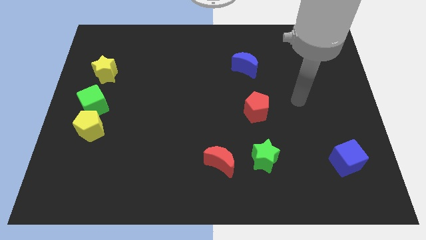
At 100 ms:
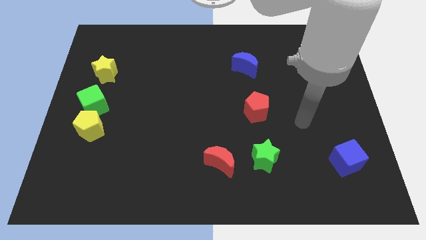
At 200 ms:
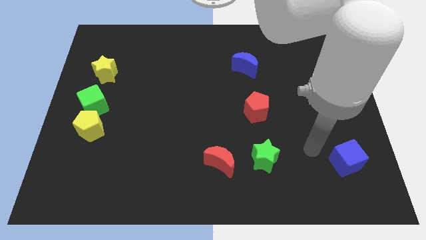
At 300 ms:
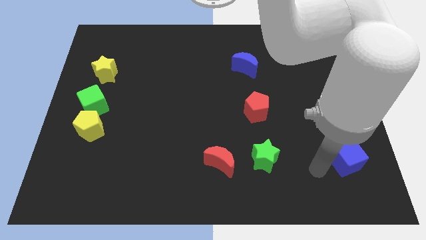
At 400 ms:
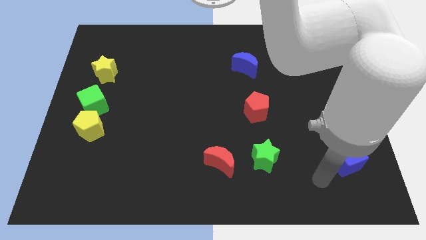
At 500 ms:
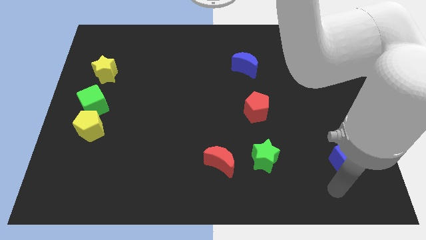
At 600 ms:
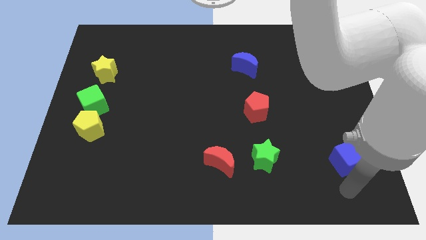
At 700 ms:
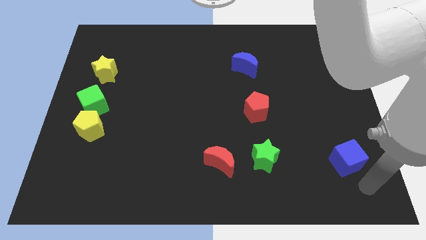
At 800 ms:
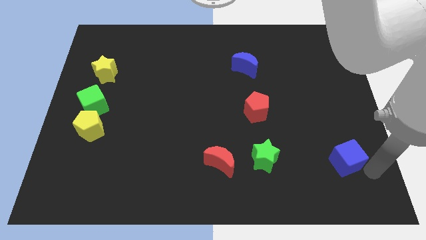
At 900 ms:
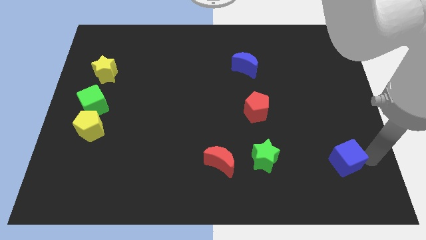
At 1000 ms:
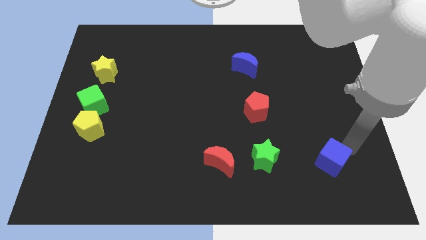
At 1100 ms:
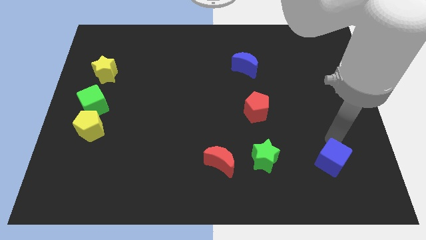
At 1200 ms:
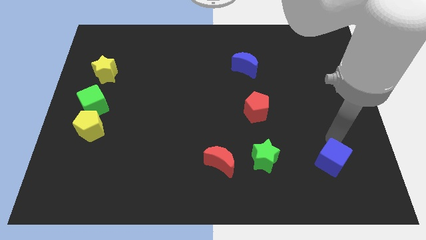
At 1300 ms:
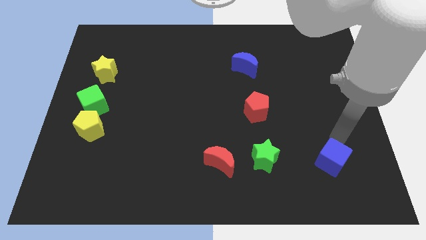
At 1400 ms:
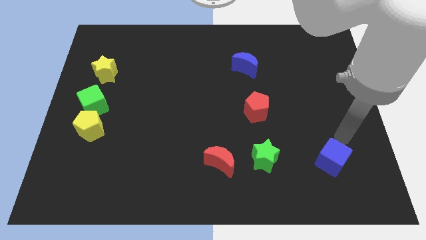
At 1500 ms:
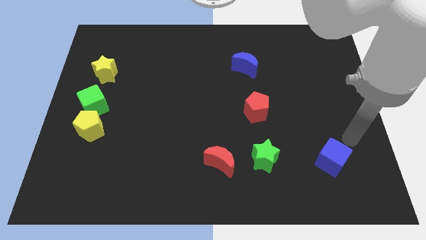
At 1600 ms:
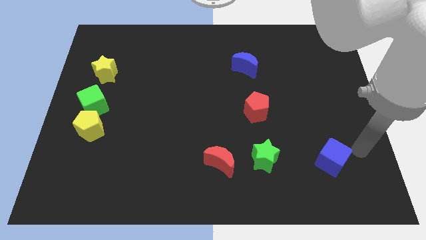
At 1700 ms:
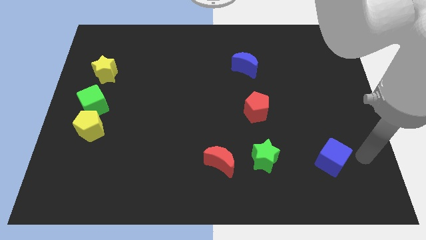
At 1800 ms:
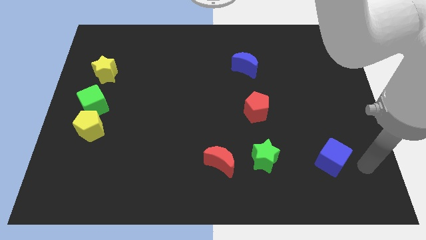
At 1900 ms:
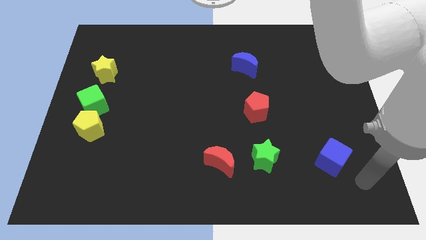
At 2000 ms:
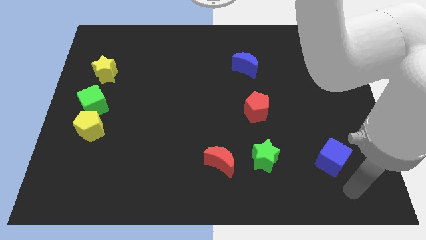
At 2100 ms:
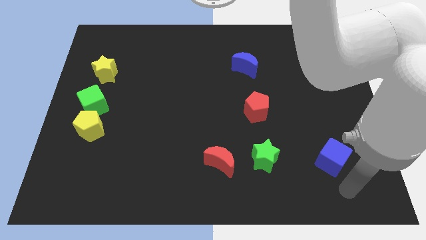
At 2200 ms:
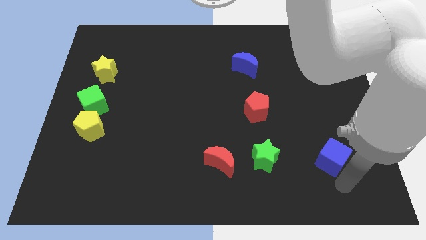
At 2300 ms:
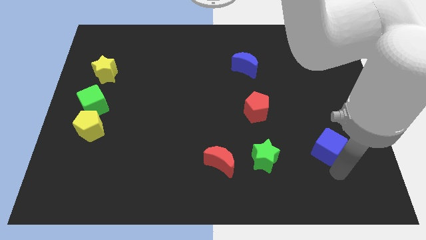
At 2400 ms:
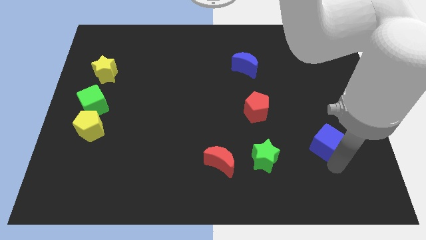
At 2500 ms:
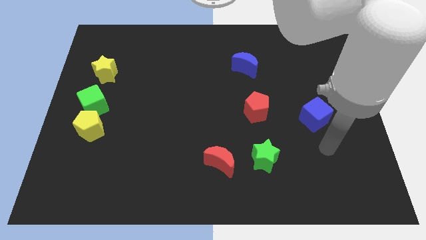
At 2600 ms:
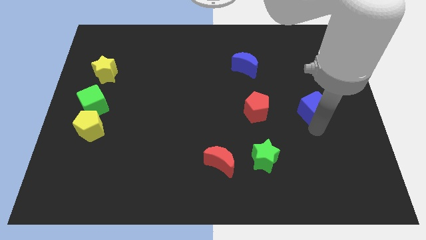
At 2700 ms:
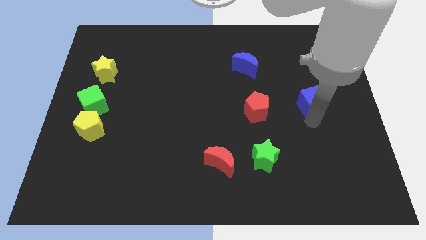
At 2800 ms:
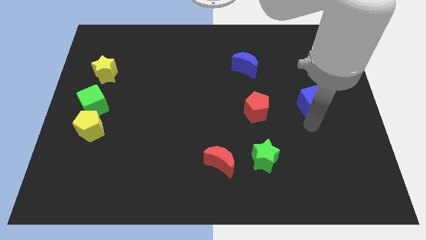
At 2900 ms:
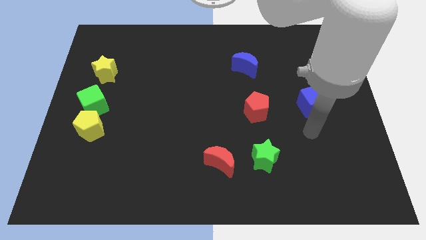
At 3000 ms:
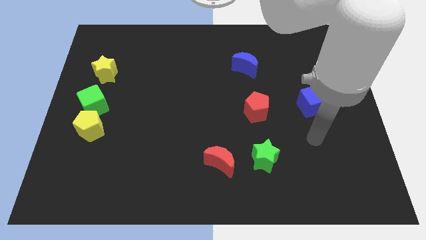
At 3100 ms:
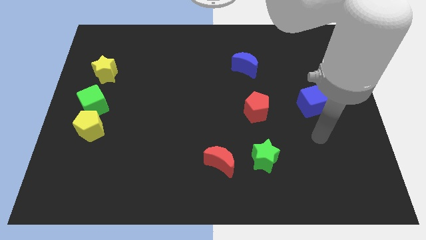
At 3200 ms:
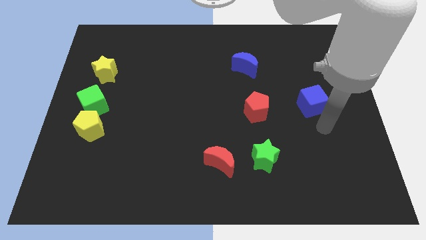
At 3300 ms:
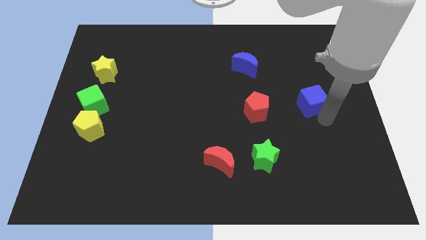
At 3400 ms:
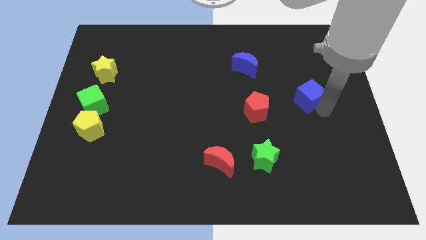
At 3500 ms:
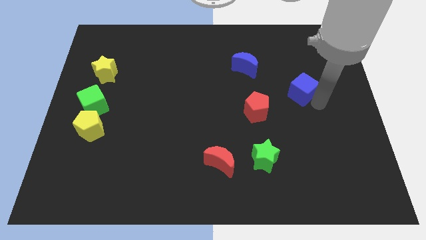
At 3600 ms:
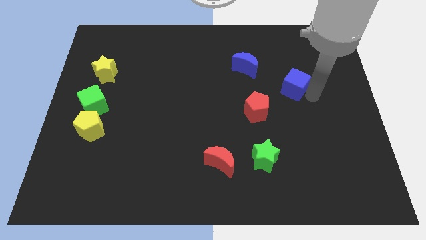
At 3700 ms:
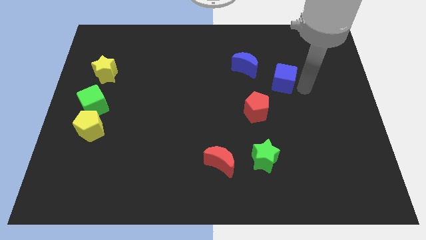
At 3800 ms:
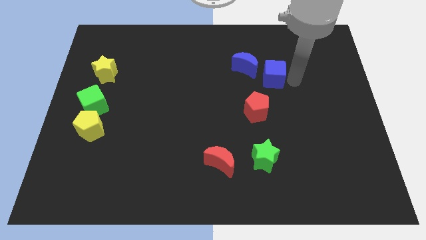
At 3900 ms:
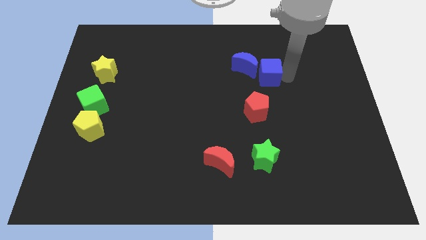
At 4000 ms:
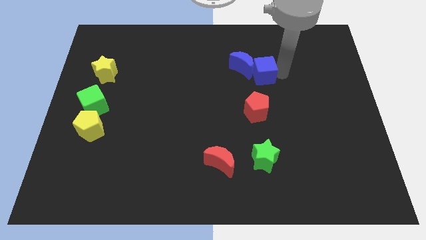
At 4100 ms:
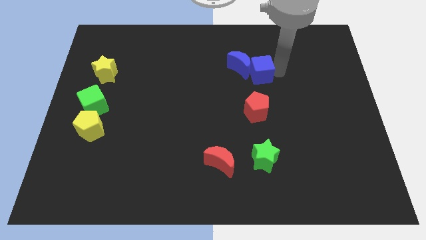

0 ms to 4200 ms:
push the blue cube close to the blue moon

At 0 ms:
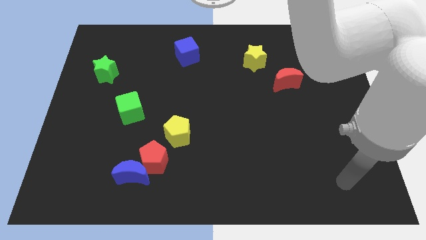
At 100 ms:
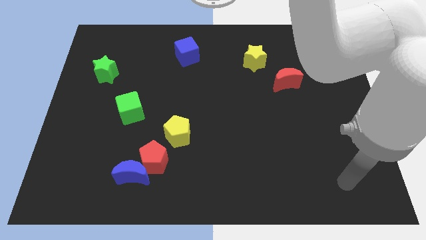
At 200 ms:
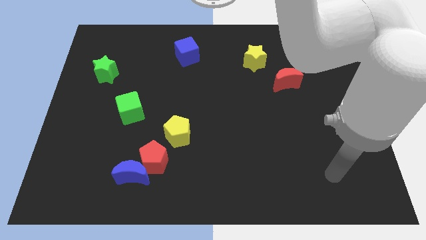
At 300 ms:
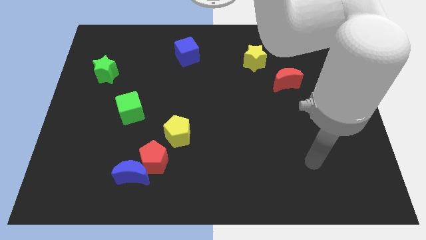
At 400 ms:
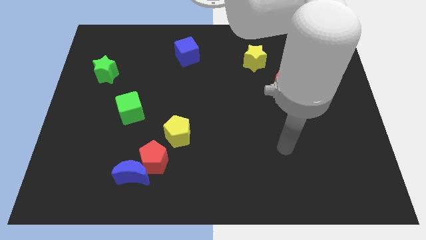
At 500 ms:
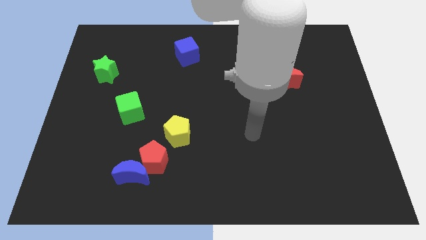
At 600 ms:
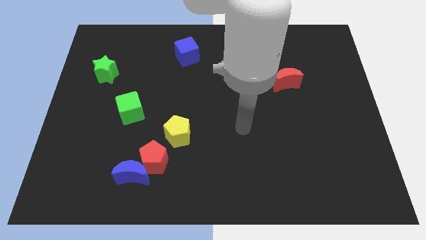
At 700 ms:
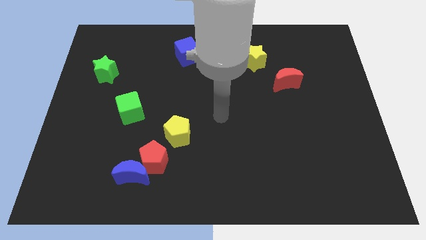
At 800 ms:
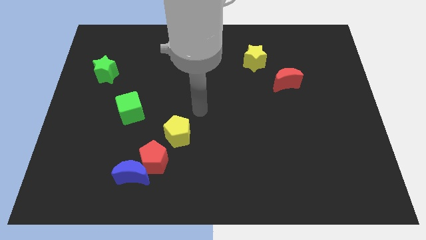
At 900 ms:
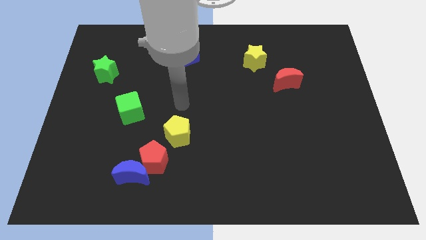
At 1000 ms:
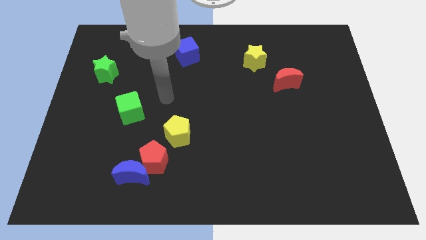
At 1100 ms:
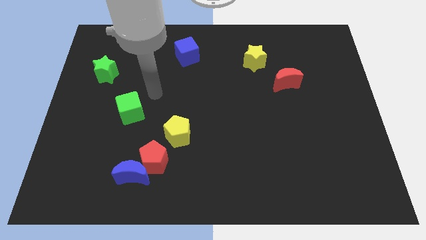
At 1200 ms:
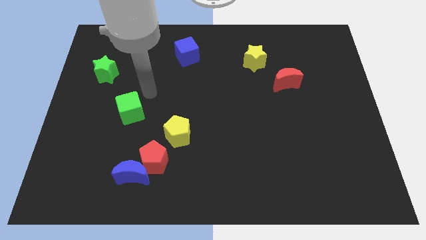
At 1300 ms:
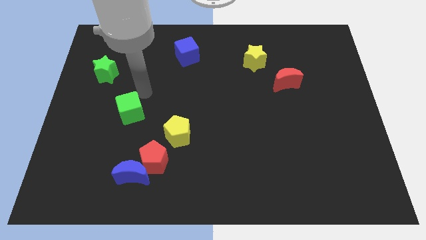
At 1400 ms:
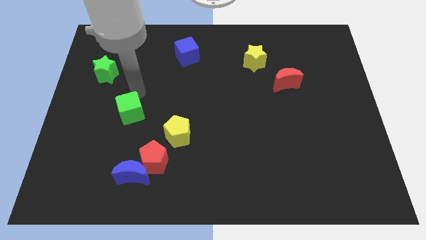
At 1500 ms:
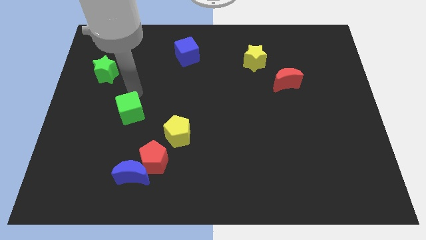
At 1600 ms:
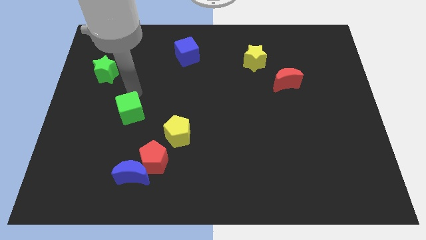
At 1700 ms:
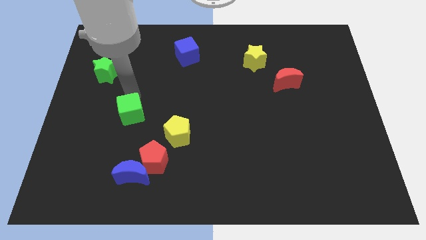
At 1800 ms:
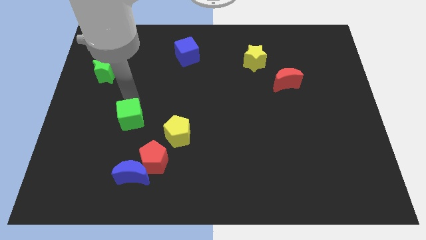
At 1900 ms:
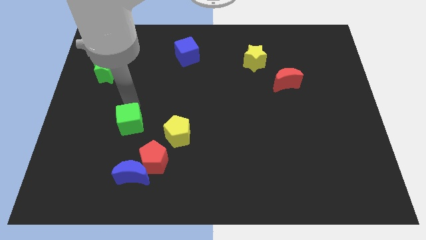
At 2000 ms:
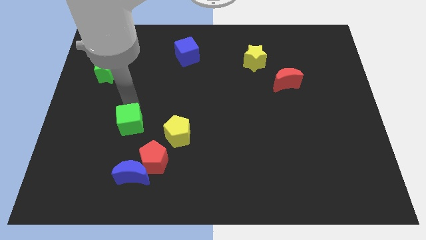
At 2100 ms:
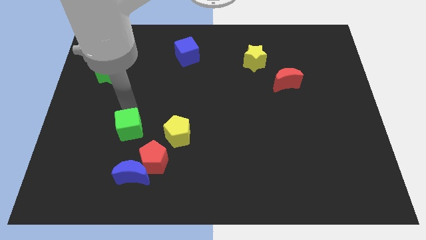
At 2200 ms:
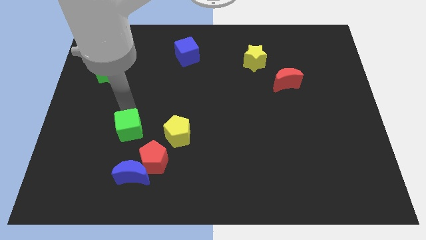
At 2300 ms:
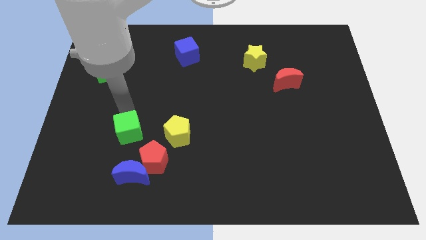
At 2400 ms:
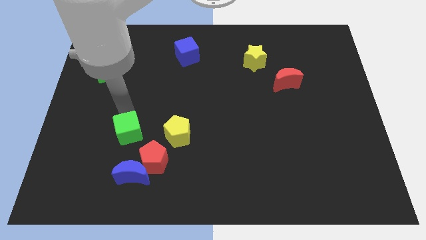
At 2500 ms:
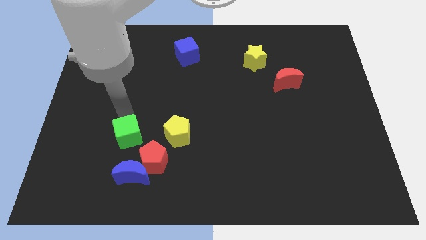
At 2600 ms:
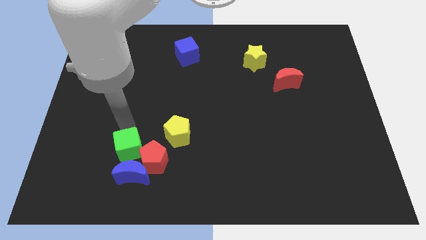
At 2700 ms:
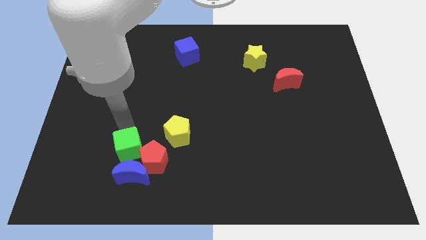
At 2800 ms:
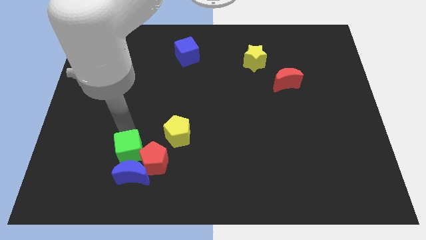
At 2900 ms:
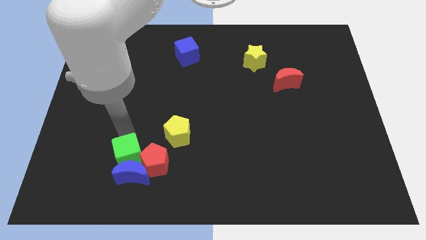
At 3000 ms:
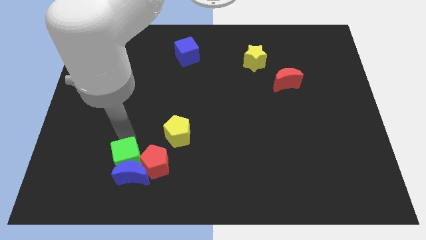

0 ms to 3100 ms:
slide the green cube towards the blue moon

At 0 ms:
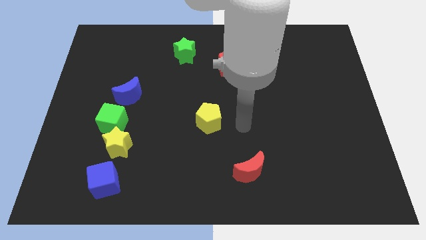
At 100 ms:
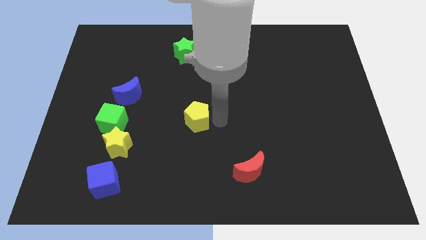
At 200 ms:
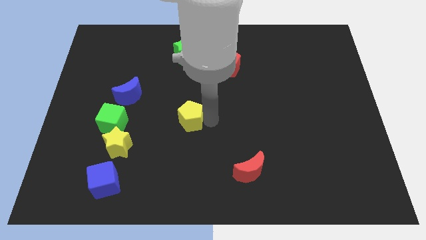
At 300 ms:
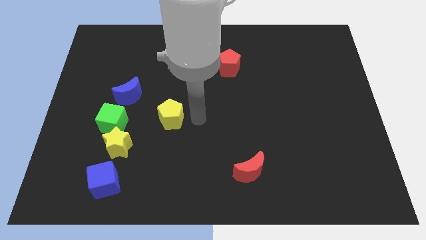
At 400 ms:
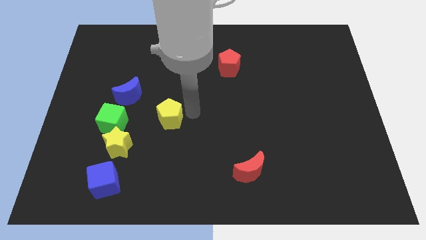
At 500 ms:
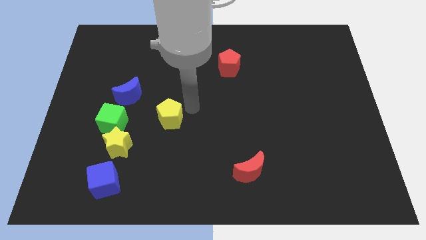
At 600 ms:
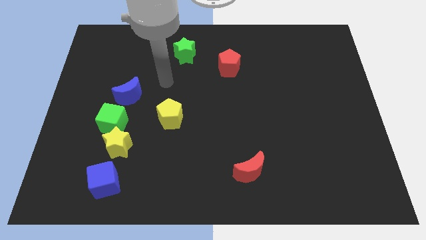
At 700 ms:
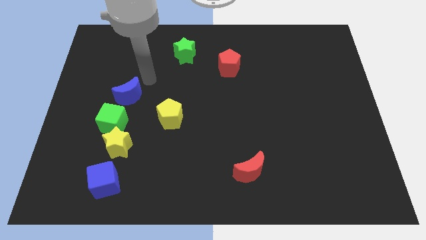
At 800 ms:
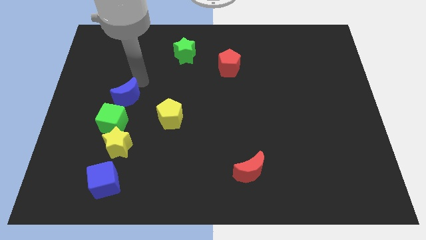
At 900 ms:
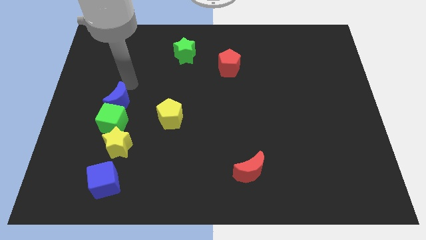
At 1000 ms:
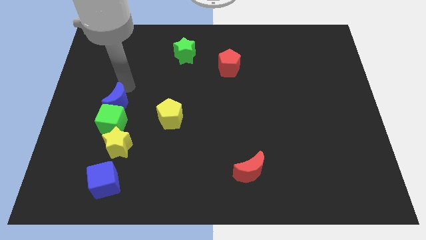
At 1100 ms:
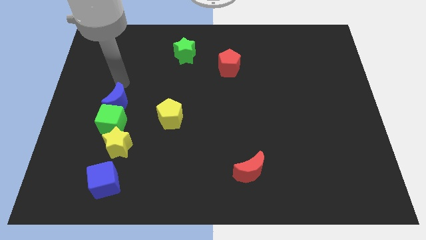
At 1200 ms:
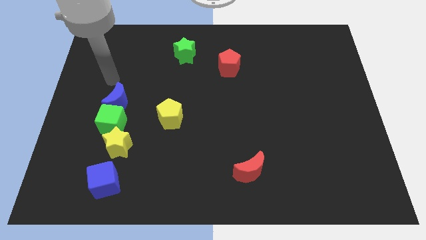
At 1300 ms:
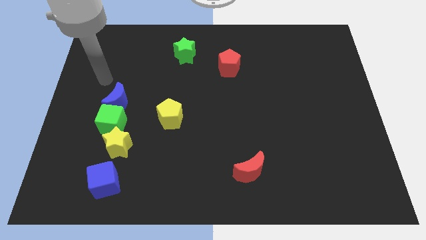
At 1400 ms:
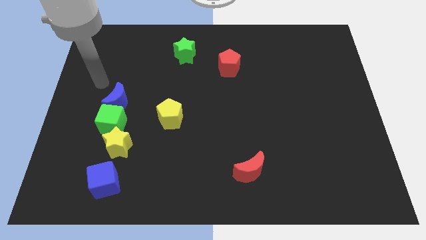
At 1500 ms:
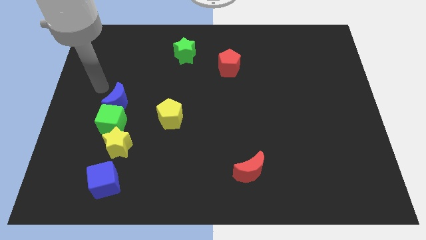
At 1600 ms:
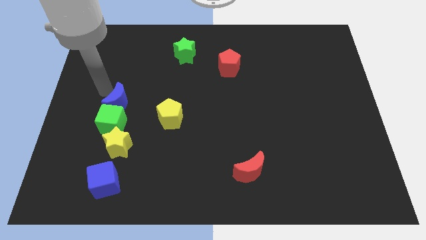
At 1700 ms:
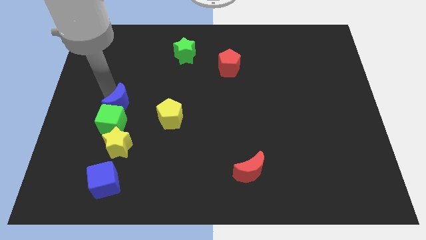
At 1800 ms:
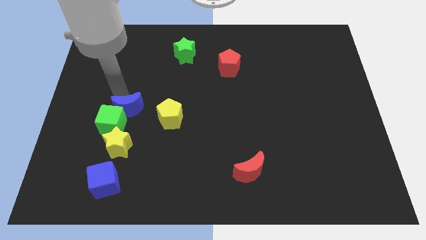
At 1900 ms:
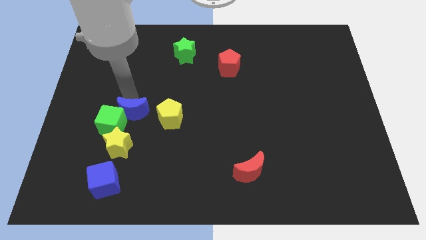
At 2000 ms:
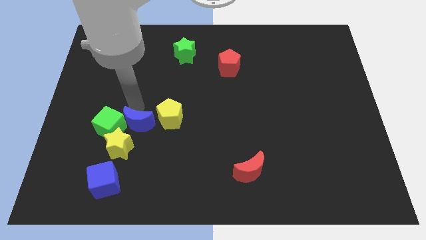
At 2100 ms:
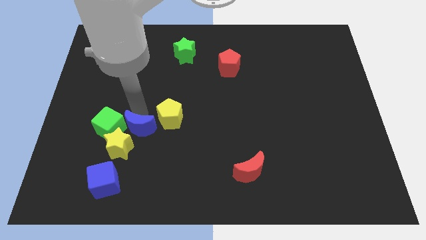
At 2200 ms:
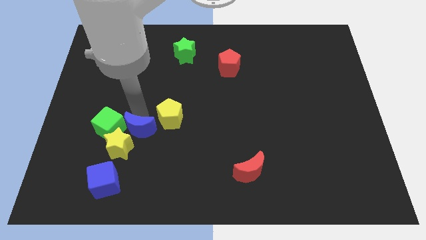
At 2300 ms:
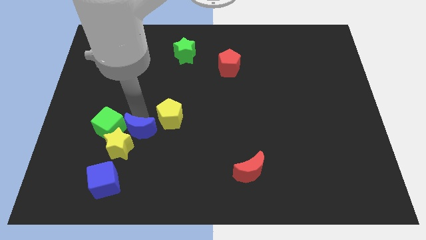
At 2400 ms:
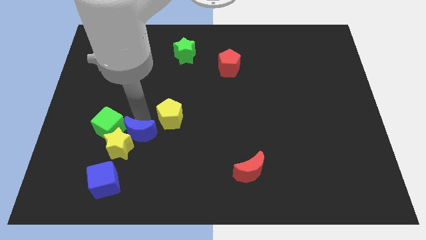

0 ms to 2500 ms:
put the blue moon close to the yellow star
